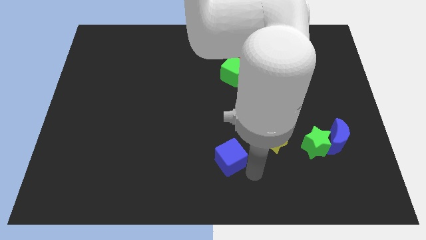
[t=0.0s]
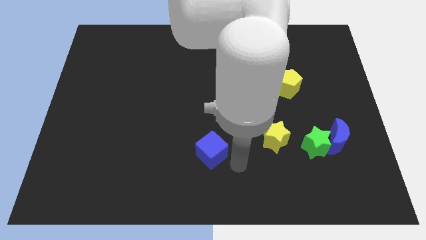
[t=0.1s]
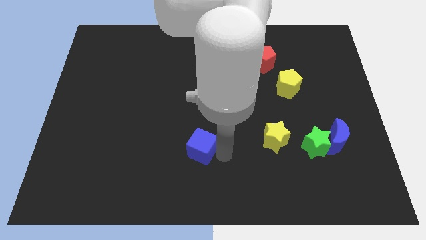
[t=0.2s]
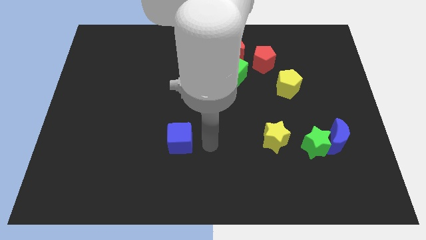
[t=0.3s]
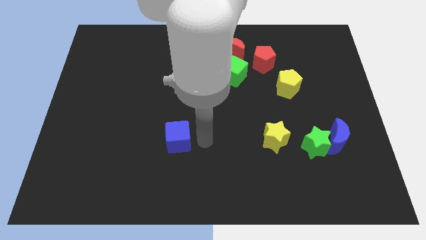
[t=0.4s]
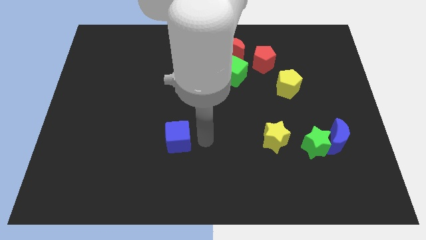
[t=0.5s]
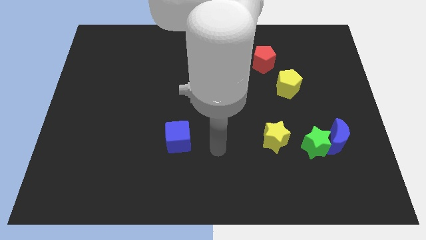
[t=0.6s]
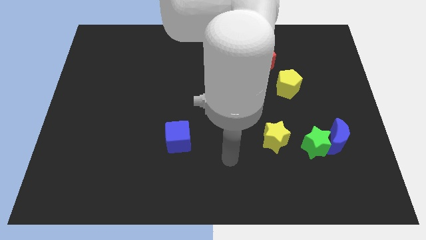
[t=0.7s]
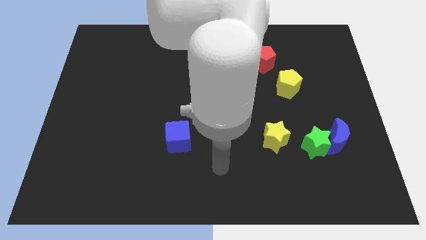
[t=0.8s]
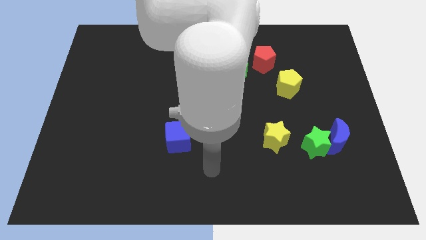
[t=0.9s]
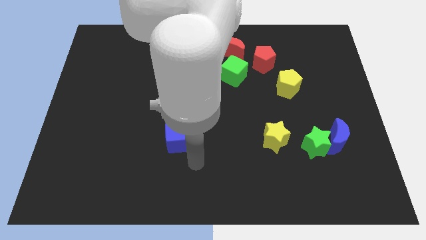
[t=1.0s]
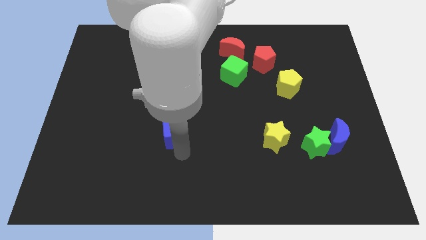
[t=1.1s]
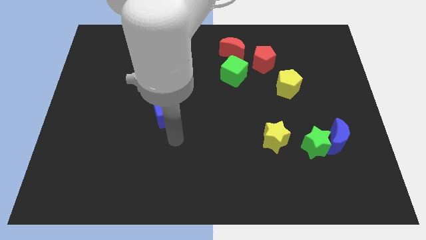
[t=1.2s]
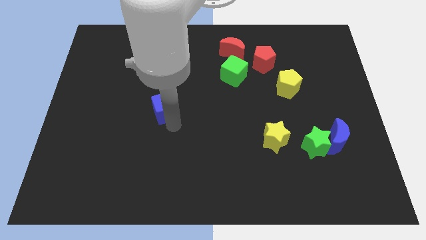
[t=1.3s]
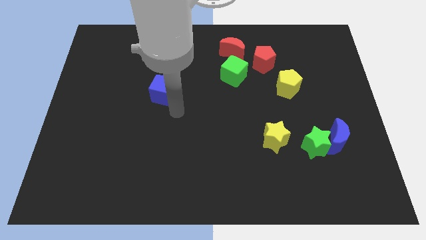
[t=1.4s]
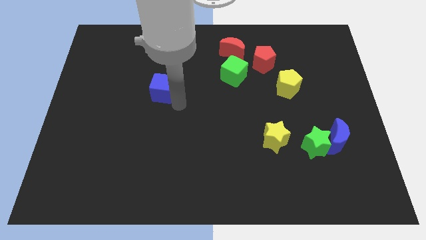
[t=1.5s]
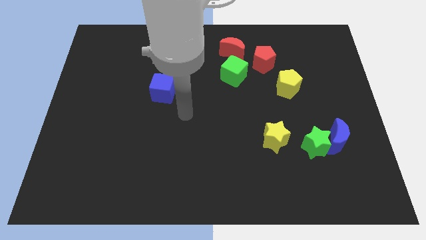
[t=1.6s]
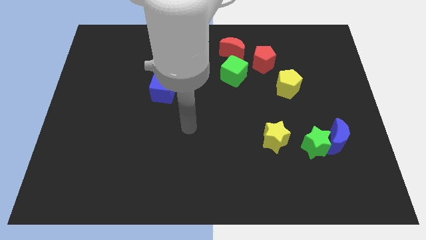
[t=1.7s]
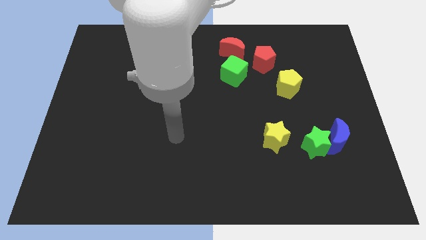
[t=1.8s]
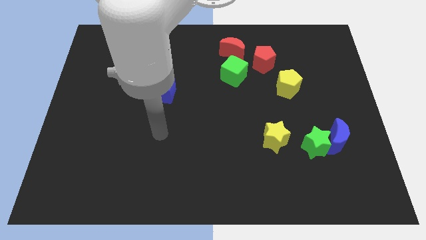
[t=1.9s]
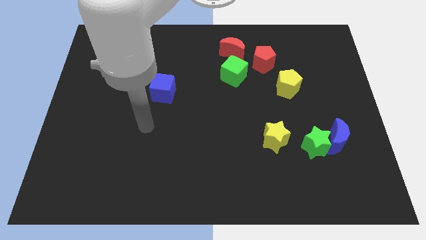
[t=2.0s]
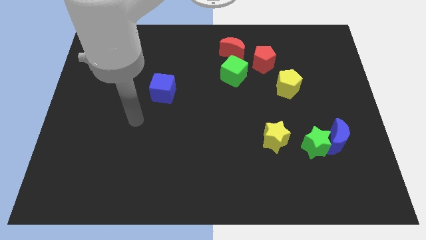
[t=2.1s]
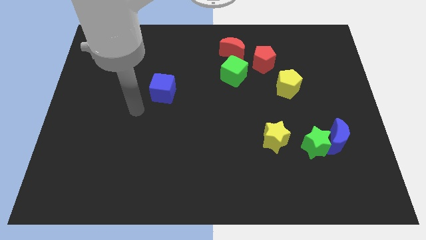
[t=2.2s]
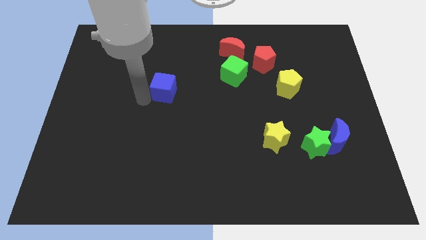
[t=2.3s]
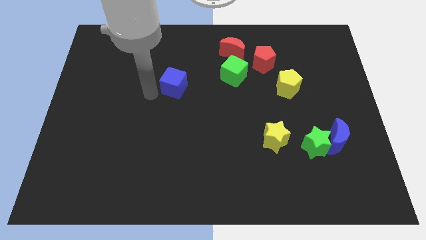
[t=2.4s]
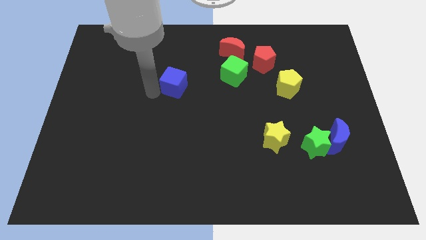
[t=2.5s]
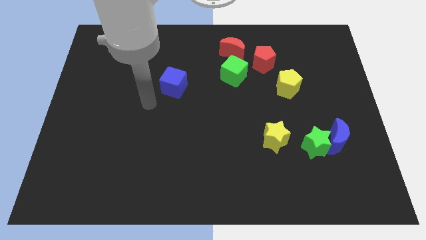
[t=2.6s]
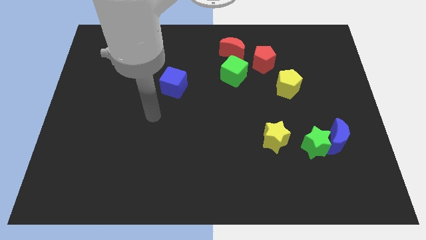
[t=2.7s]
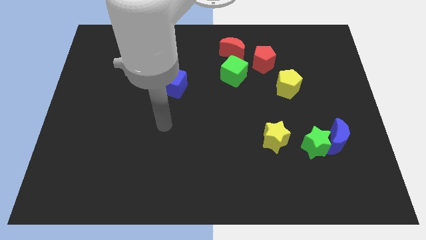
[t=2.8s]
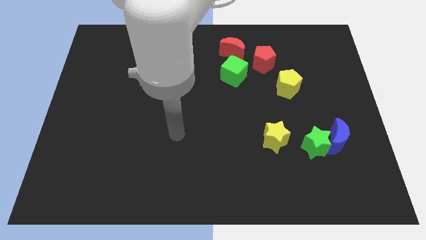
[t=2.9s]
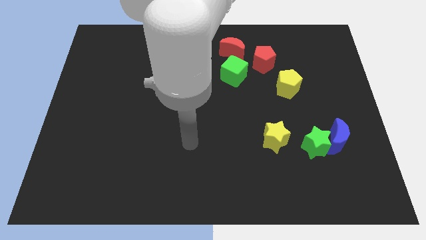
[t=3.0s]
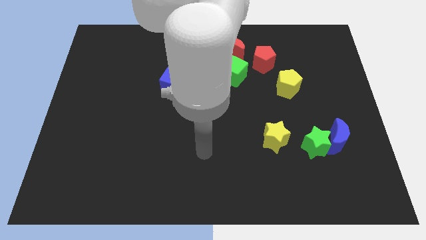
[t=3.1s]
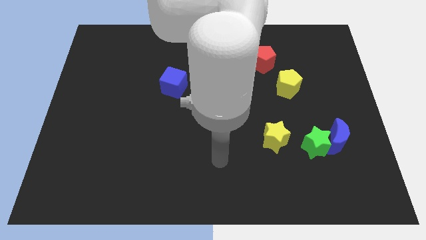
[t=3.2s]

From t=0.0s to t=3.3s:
push the blue cube towards top

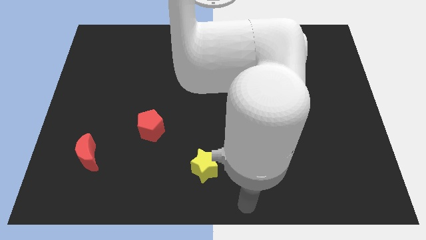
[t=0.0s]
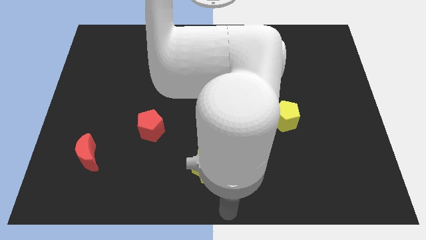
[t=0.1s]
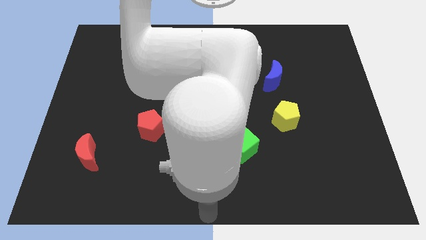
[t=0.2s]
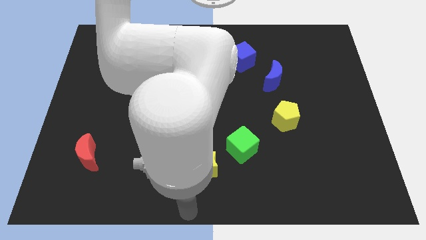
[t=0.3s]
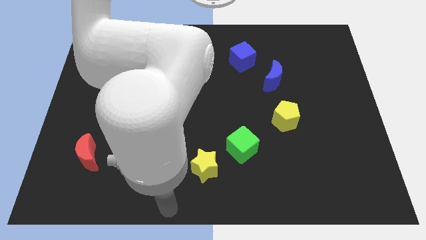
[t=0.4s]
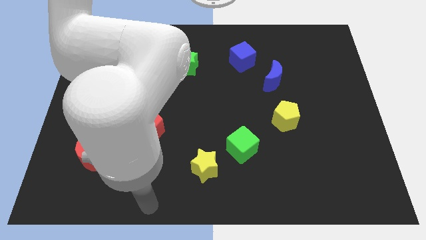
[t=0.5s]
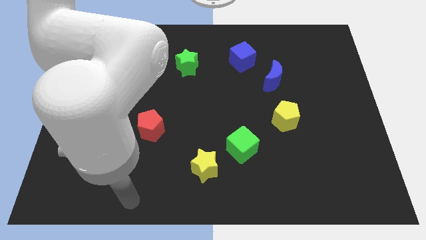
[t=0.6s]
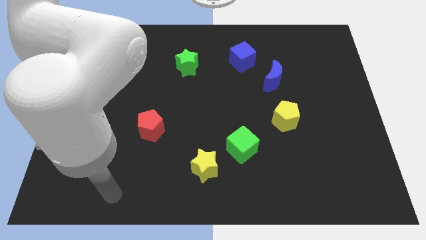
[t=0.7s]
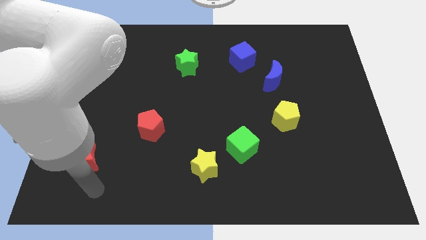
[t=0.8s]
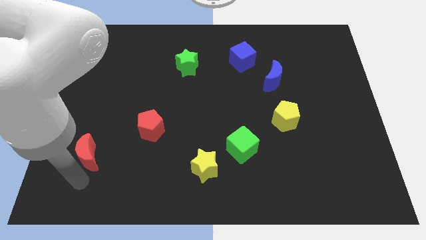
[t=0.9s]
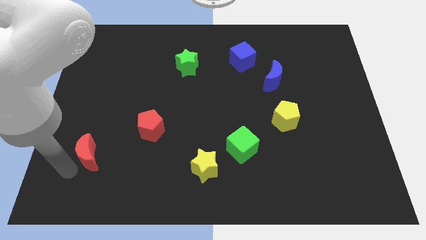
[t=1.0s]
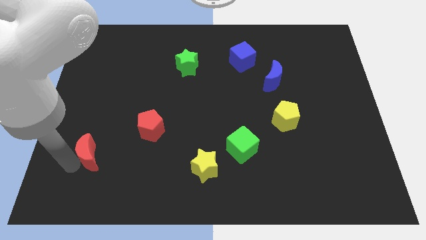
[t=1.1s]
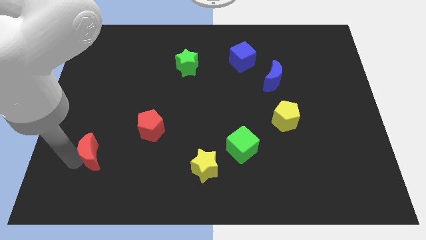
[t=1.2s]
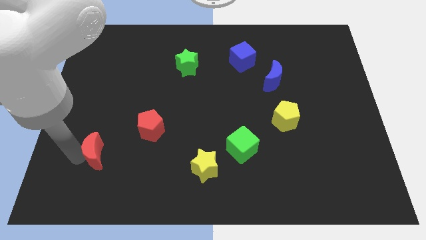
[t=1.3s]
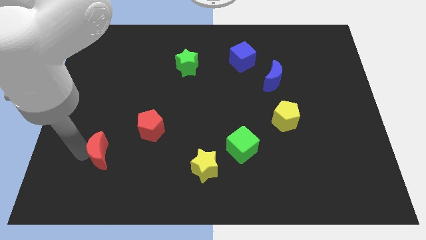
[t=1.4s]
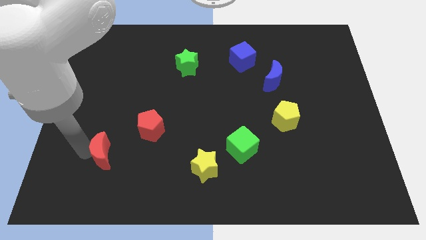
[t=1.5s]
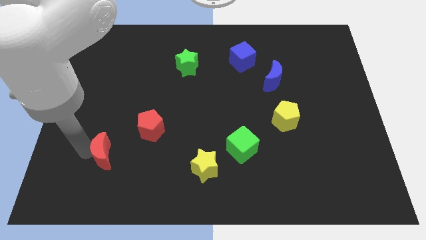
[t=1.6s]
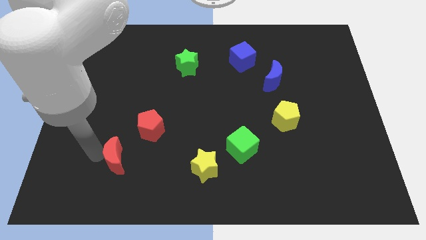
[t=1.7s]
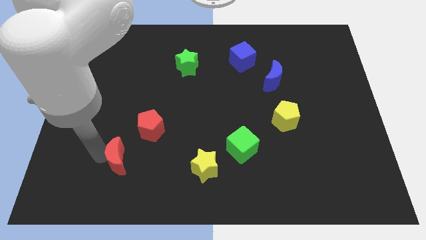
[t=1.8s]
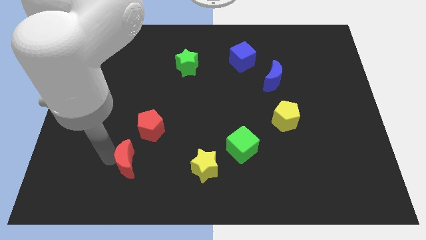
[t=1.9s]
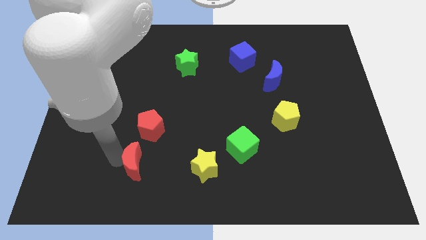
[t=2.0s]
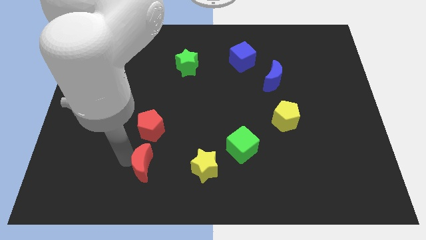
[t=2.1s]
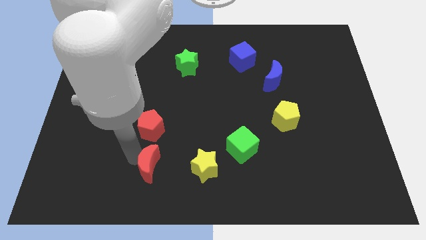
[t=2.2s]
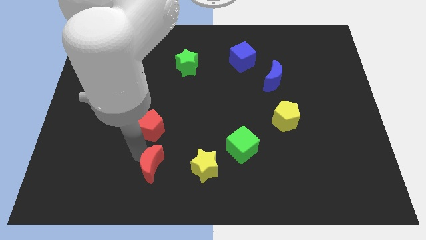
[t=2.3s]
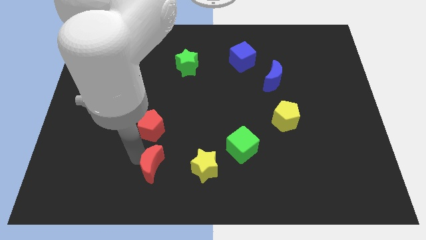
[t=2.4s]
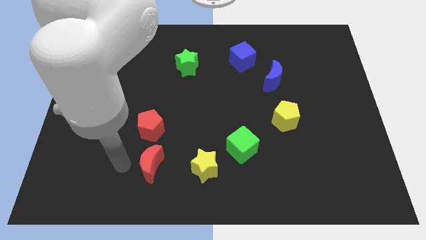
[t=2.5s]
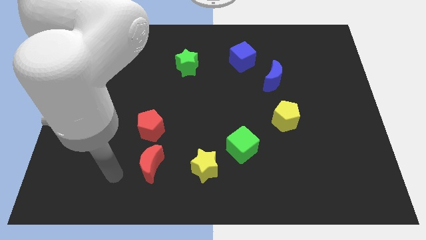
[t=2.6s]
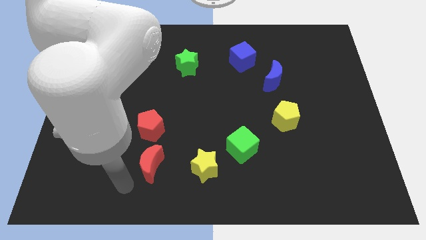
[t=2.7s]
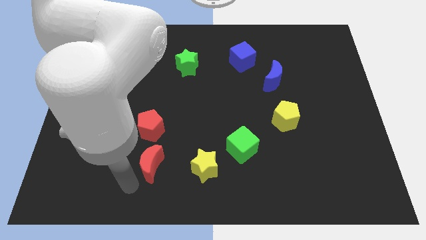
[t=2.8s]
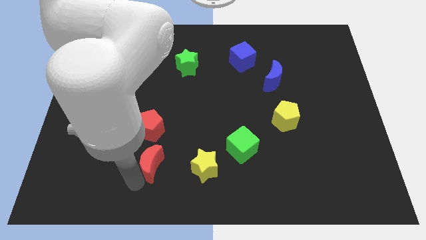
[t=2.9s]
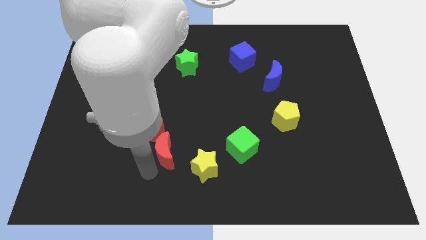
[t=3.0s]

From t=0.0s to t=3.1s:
place the red crescent below the red pentagon

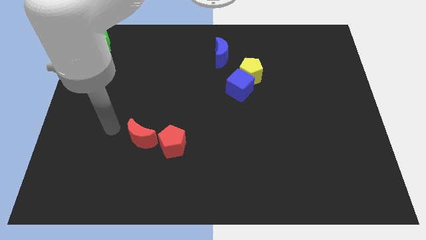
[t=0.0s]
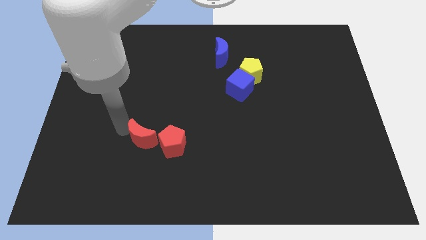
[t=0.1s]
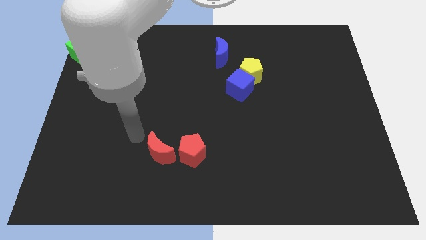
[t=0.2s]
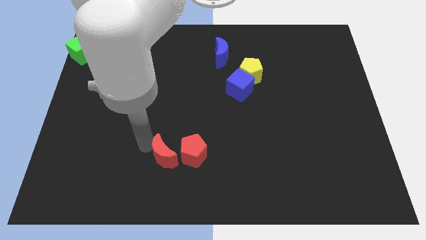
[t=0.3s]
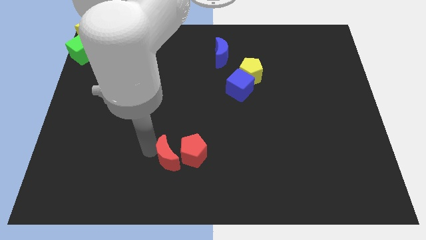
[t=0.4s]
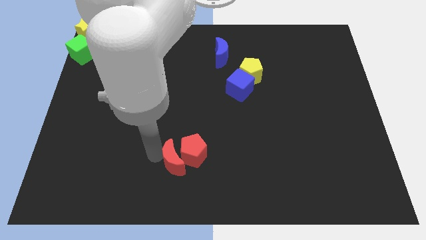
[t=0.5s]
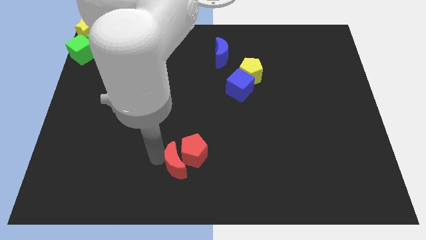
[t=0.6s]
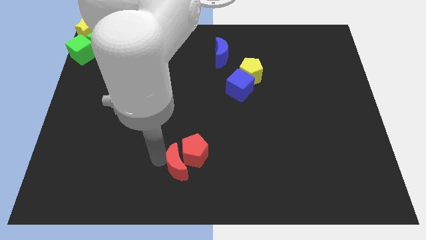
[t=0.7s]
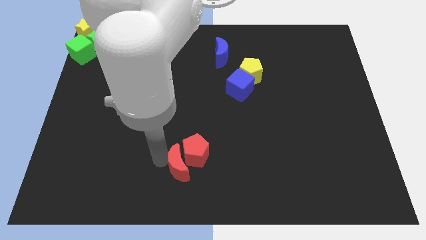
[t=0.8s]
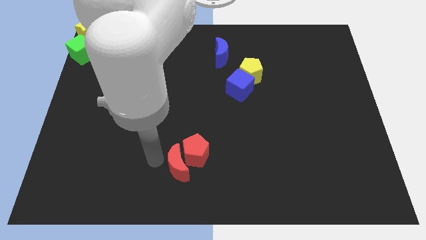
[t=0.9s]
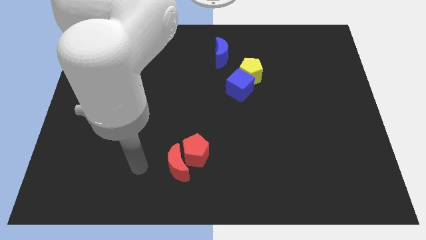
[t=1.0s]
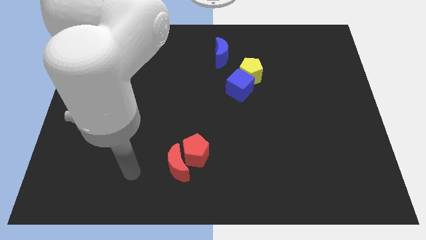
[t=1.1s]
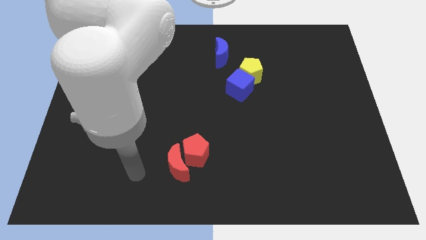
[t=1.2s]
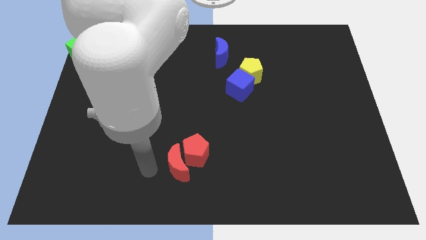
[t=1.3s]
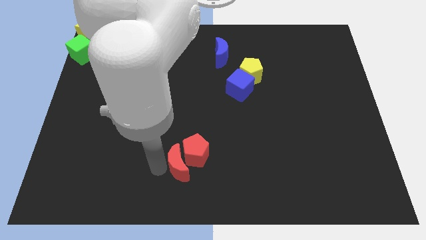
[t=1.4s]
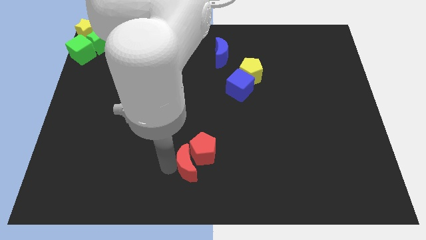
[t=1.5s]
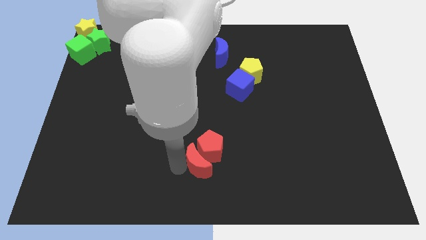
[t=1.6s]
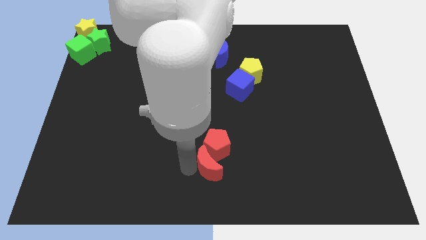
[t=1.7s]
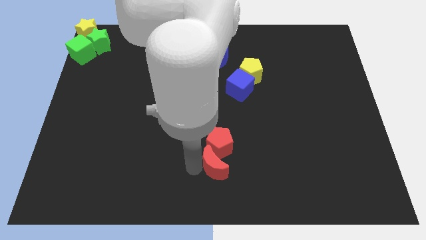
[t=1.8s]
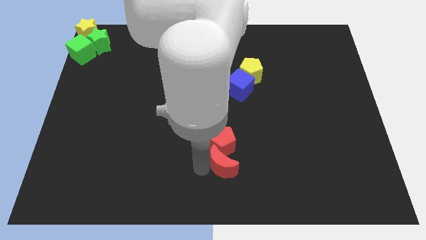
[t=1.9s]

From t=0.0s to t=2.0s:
place red pentagon and red moon at the bottom center of the board
